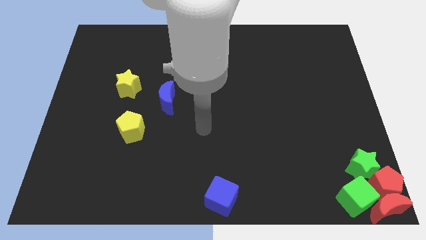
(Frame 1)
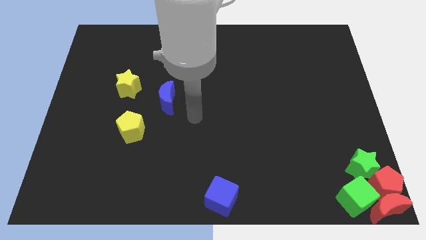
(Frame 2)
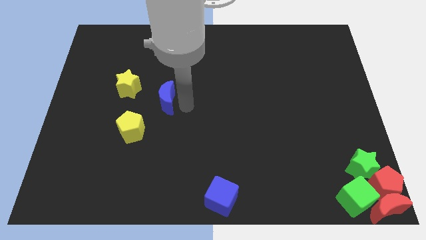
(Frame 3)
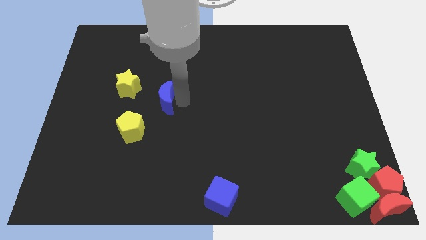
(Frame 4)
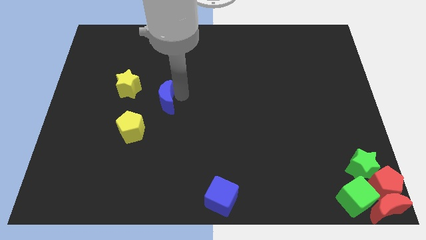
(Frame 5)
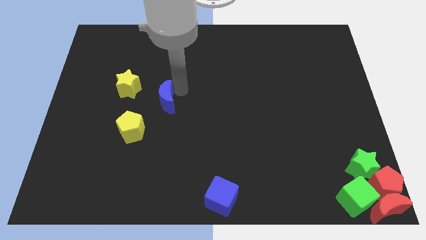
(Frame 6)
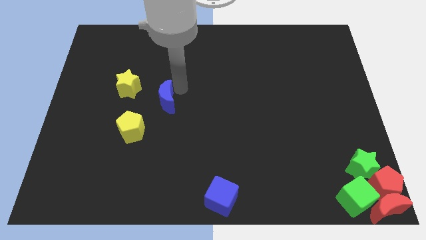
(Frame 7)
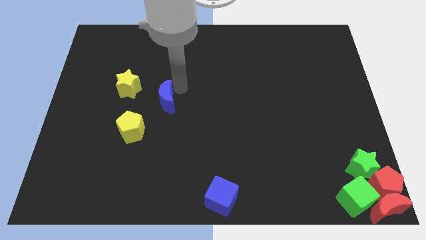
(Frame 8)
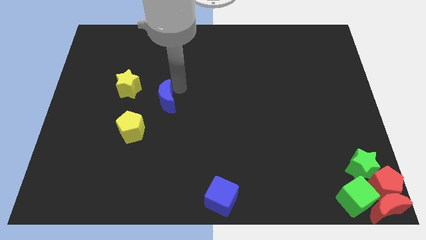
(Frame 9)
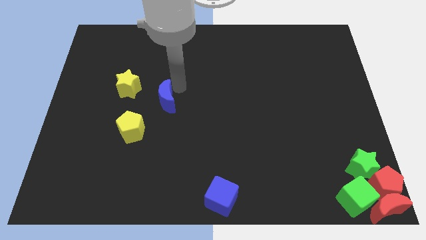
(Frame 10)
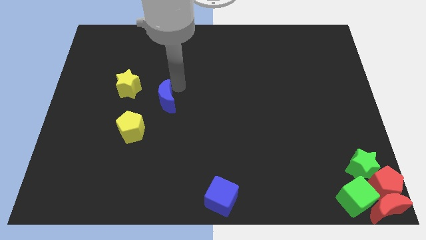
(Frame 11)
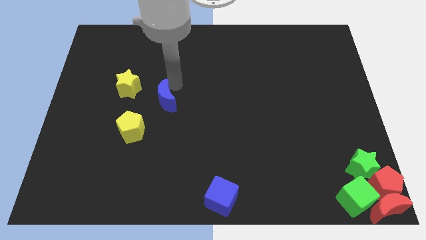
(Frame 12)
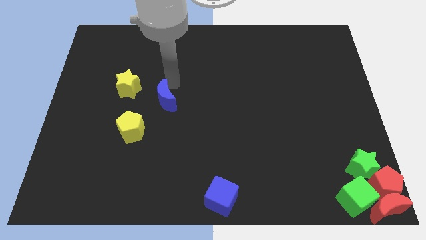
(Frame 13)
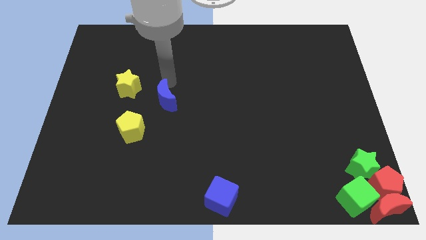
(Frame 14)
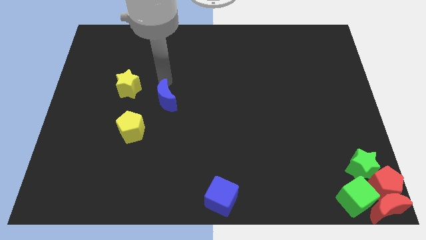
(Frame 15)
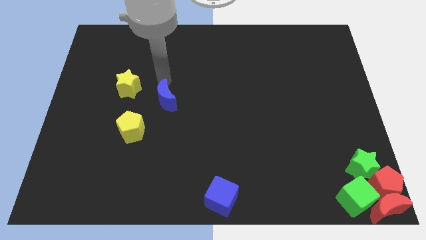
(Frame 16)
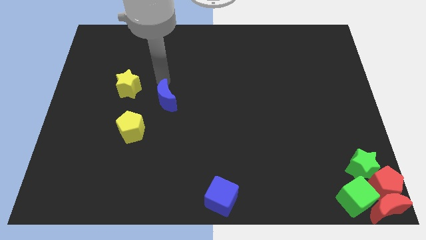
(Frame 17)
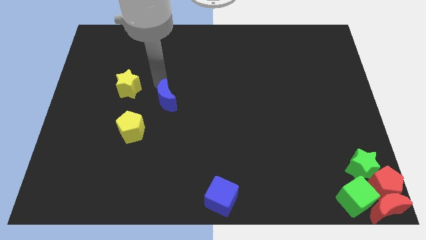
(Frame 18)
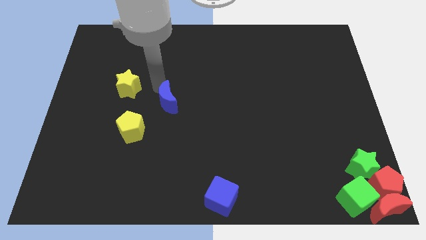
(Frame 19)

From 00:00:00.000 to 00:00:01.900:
slightly push the blue moon towards the blue cube

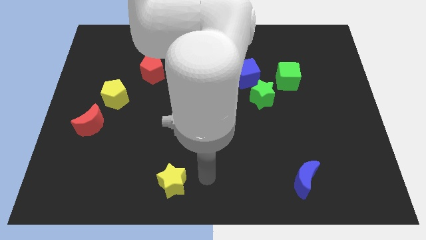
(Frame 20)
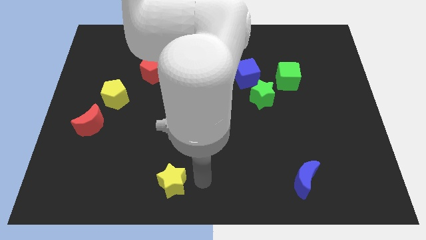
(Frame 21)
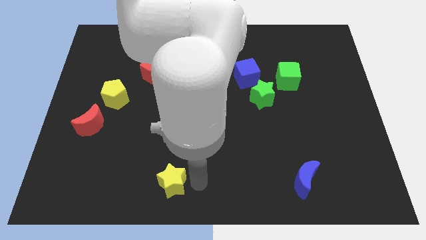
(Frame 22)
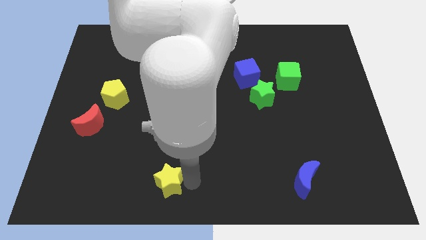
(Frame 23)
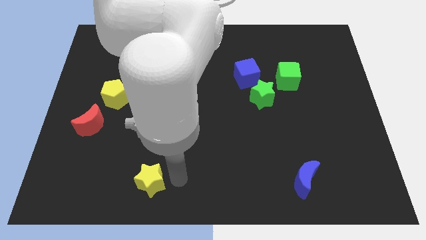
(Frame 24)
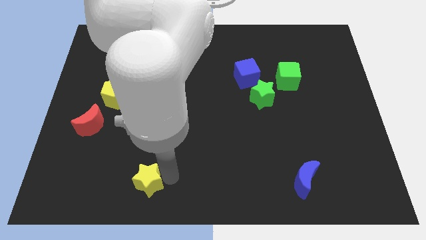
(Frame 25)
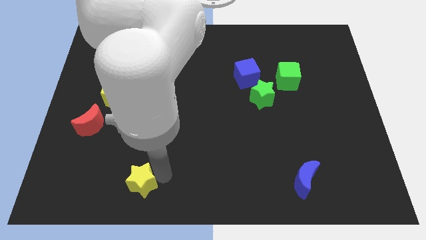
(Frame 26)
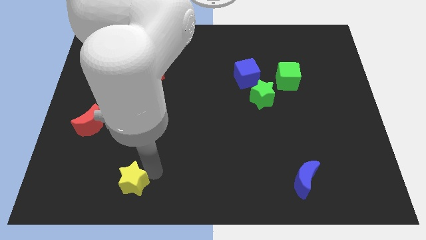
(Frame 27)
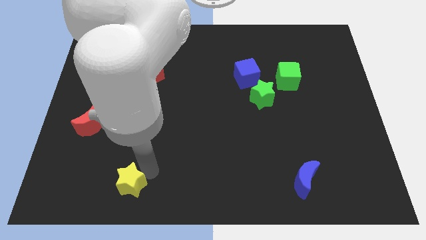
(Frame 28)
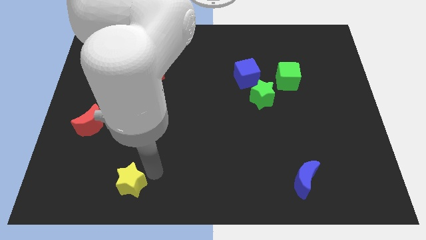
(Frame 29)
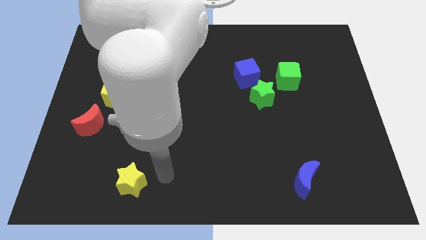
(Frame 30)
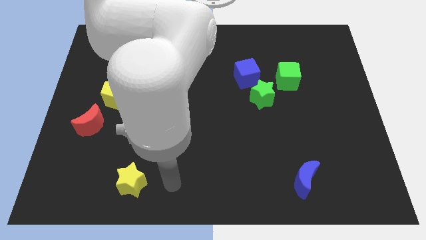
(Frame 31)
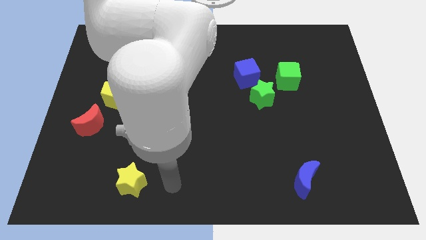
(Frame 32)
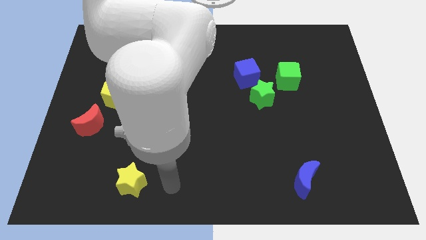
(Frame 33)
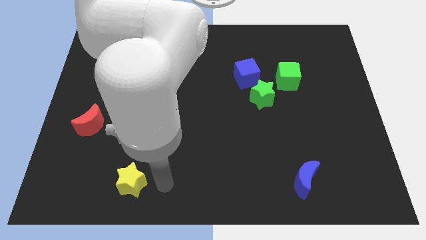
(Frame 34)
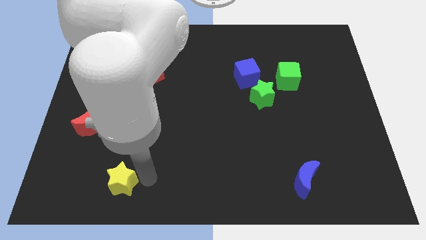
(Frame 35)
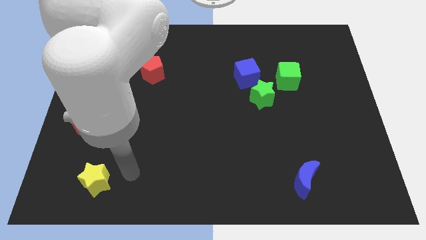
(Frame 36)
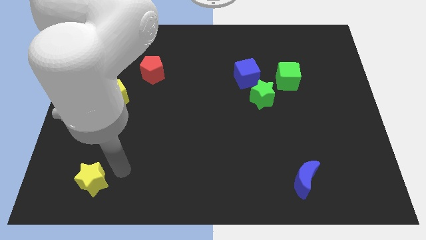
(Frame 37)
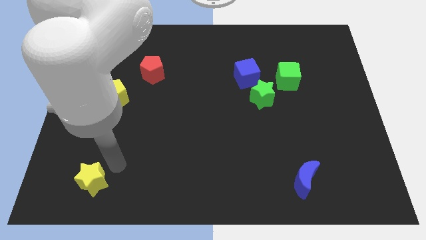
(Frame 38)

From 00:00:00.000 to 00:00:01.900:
move the yellow star to the bottom left of the table

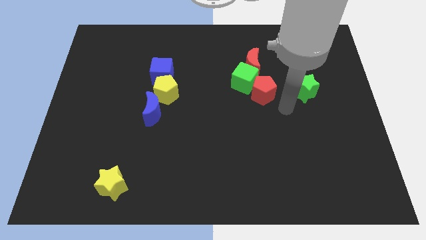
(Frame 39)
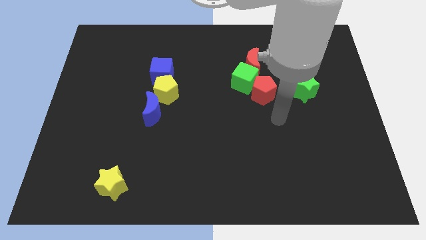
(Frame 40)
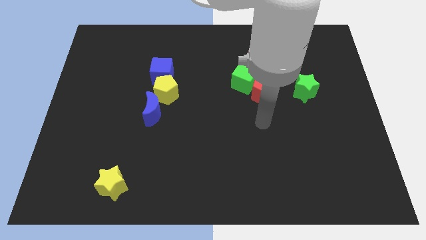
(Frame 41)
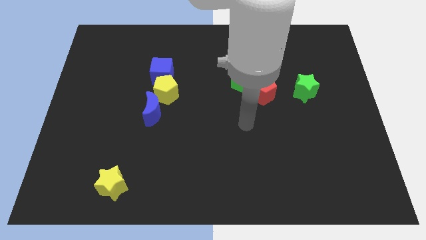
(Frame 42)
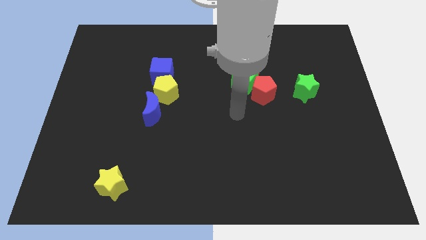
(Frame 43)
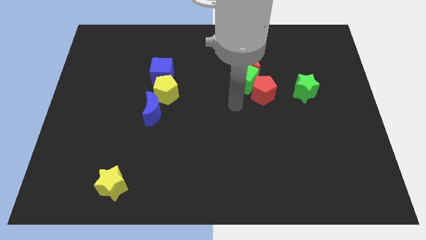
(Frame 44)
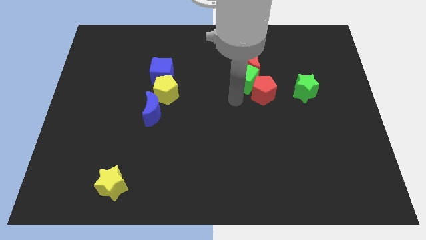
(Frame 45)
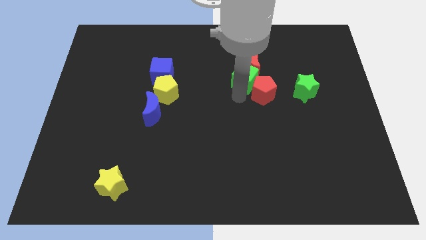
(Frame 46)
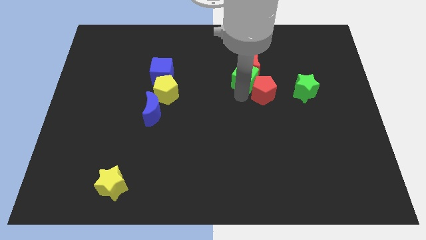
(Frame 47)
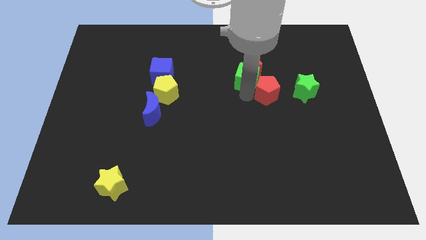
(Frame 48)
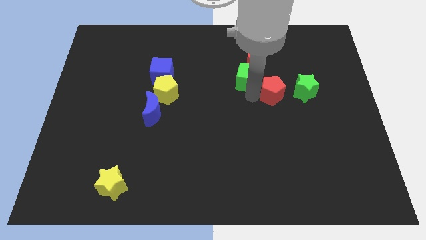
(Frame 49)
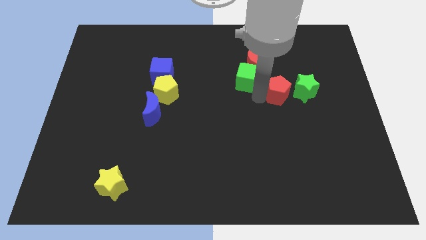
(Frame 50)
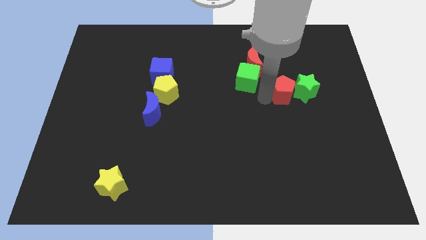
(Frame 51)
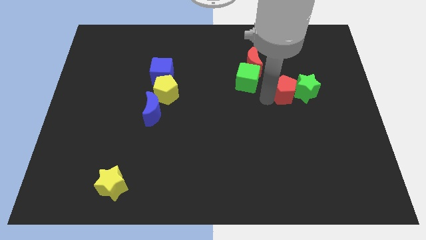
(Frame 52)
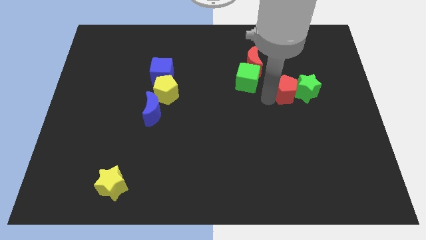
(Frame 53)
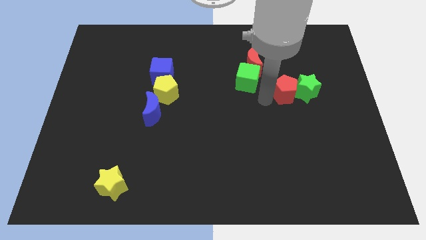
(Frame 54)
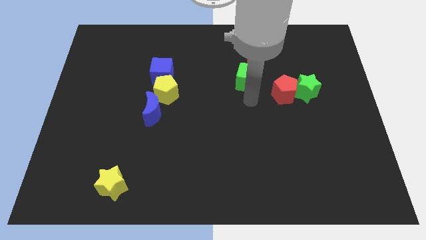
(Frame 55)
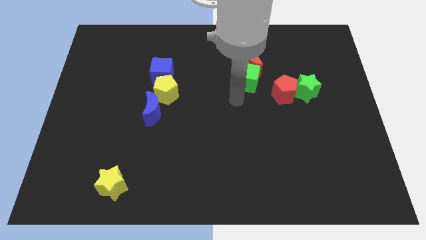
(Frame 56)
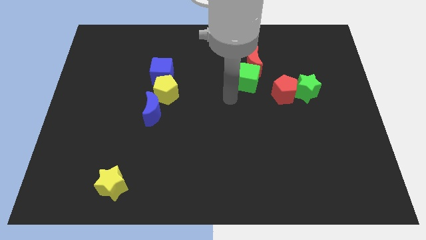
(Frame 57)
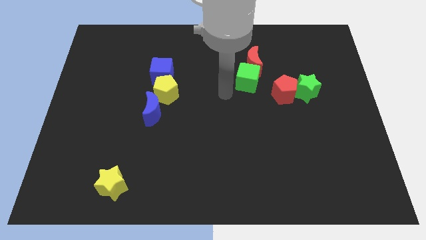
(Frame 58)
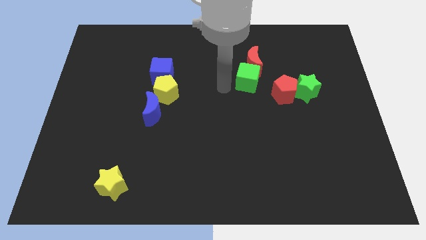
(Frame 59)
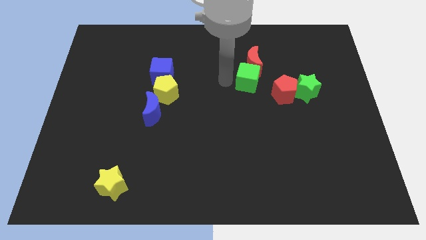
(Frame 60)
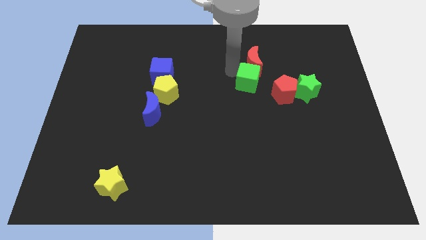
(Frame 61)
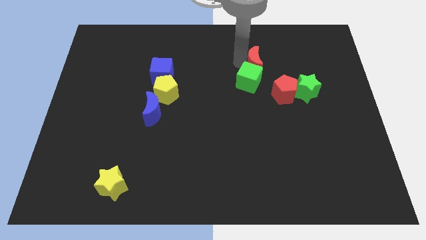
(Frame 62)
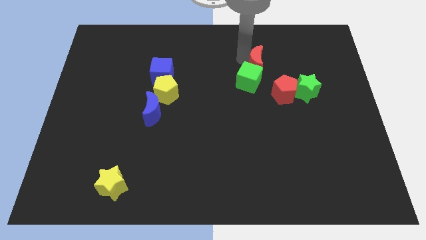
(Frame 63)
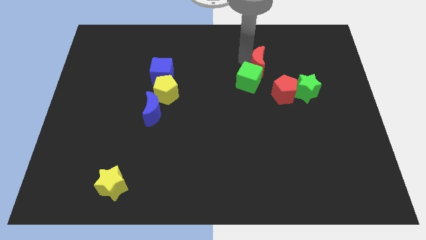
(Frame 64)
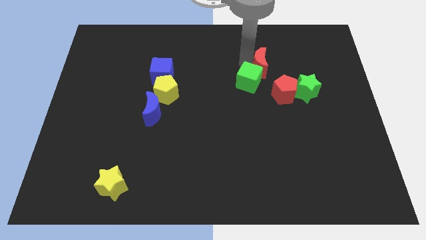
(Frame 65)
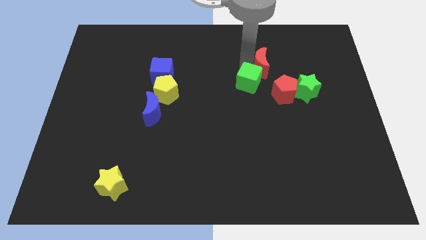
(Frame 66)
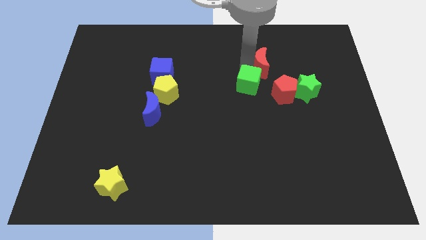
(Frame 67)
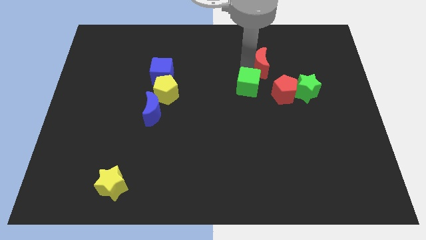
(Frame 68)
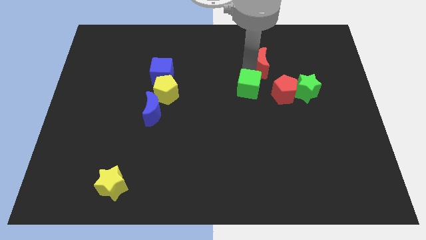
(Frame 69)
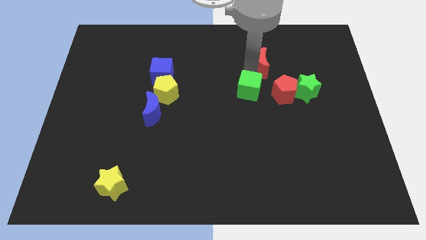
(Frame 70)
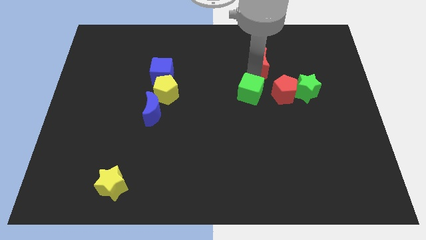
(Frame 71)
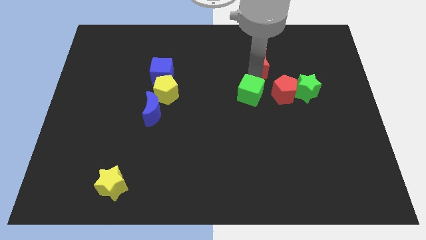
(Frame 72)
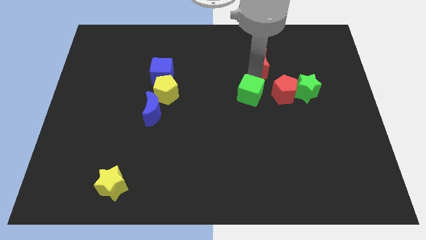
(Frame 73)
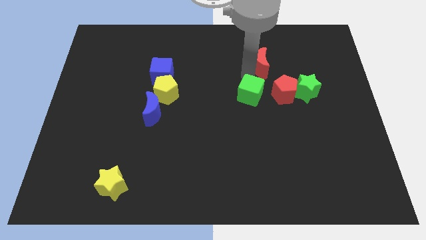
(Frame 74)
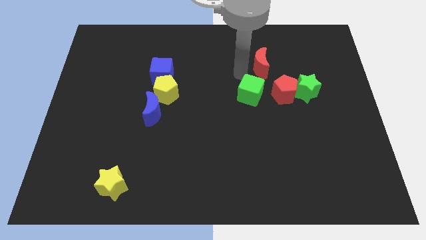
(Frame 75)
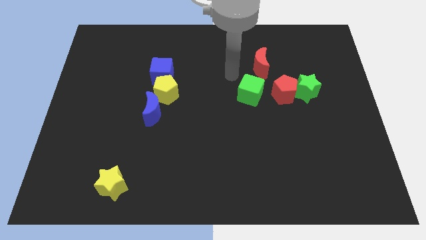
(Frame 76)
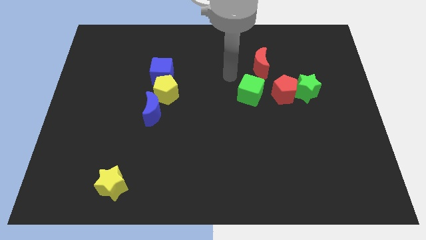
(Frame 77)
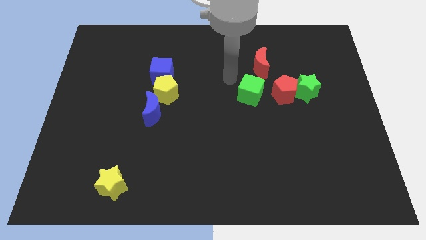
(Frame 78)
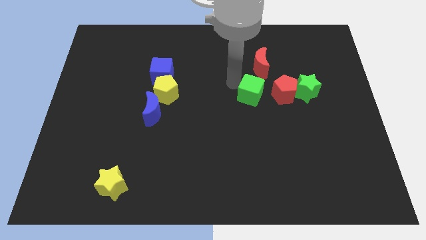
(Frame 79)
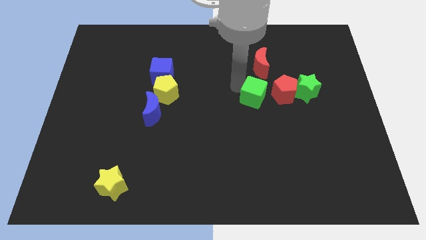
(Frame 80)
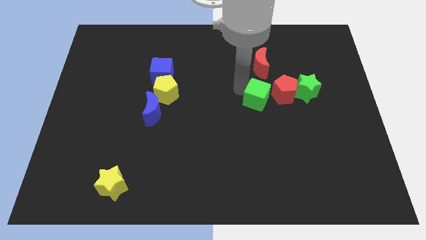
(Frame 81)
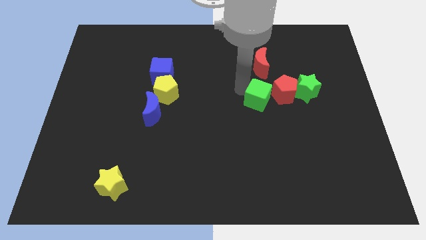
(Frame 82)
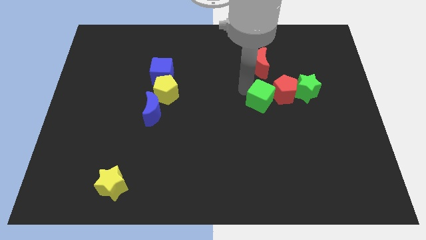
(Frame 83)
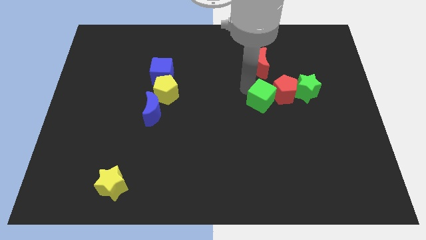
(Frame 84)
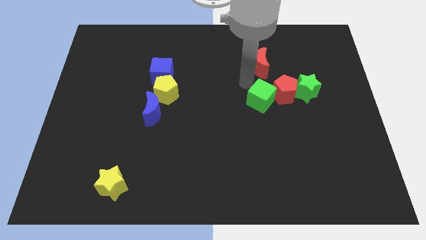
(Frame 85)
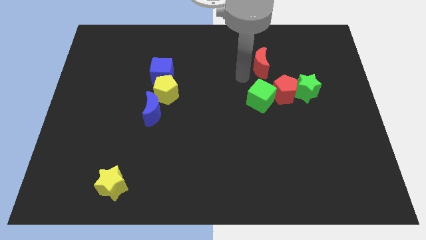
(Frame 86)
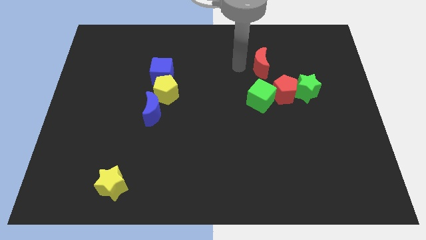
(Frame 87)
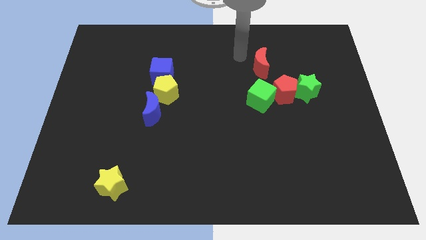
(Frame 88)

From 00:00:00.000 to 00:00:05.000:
place green blocks and the red pentagon in a horizontal line
